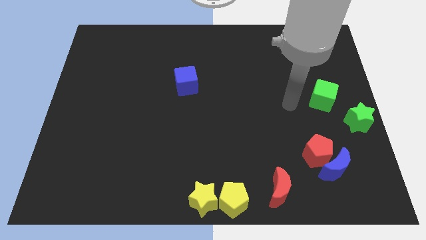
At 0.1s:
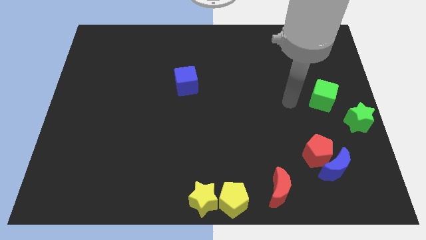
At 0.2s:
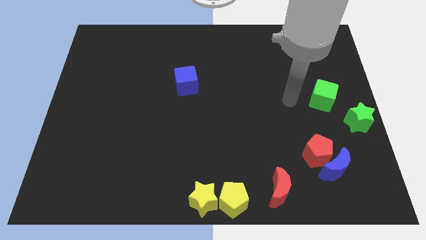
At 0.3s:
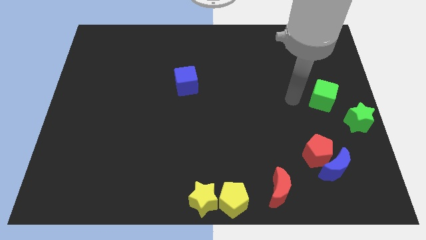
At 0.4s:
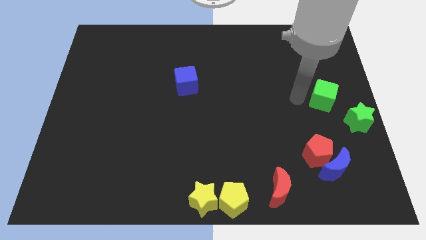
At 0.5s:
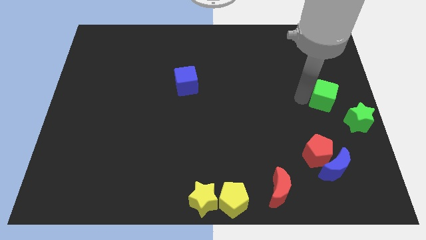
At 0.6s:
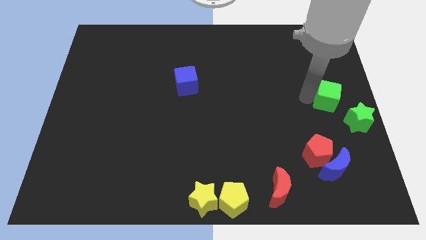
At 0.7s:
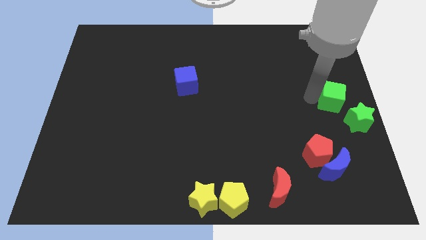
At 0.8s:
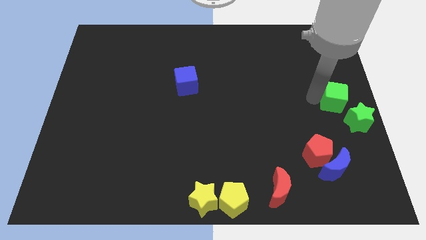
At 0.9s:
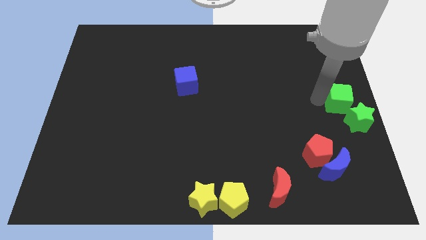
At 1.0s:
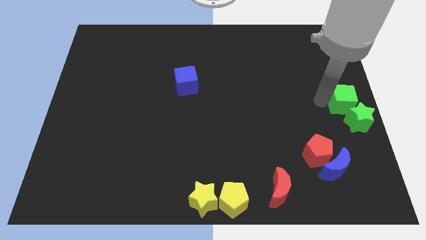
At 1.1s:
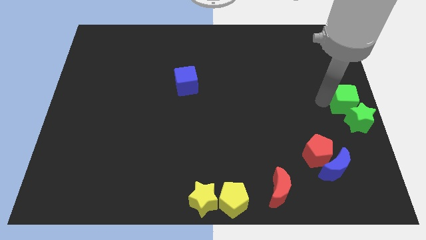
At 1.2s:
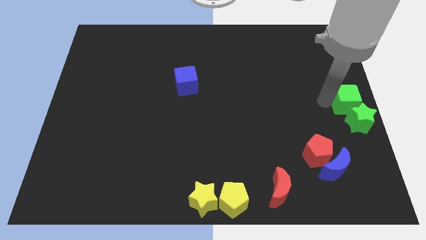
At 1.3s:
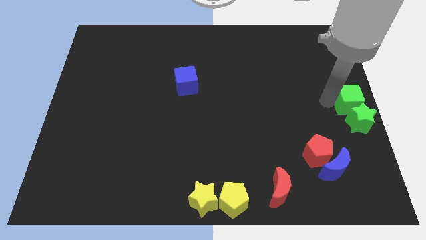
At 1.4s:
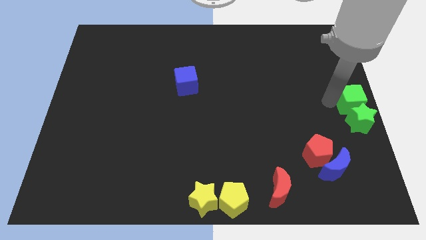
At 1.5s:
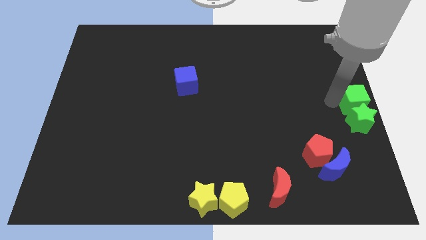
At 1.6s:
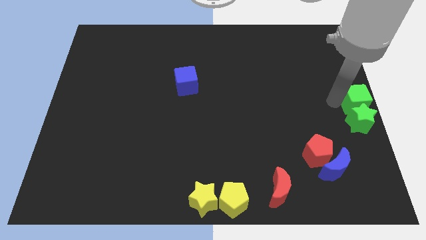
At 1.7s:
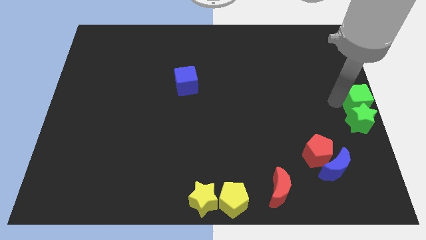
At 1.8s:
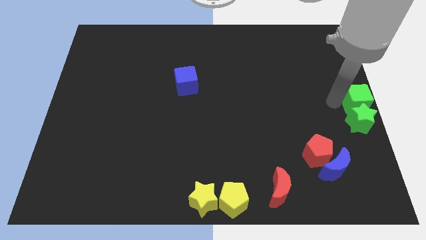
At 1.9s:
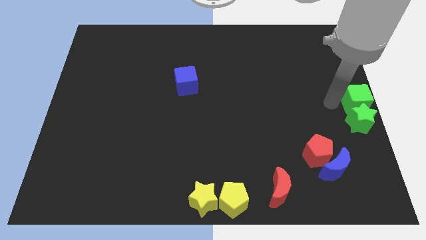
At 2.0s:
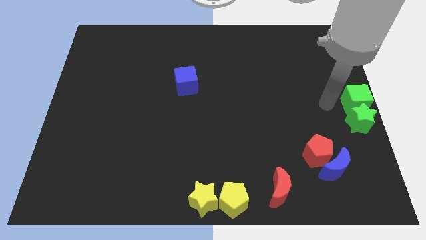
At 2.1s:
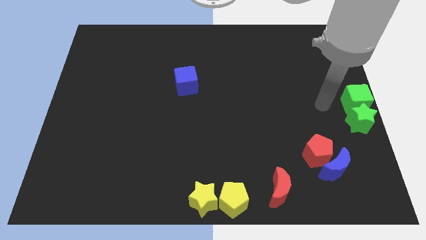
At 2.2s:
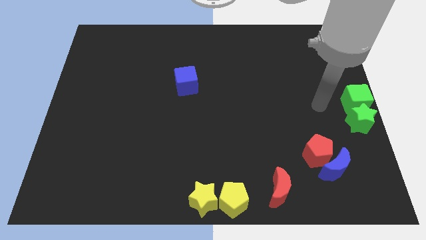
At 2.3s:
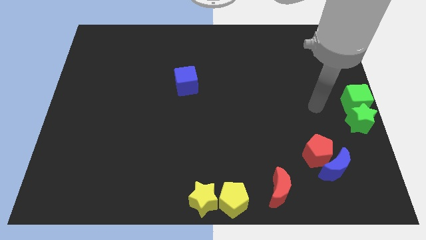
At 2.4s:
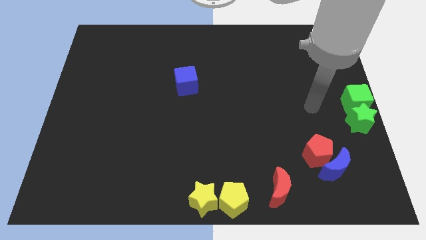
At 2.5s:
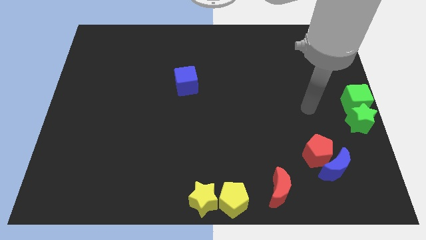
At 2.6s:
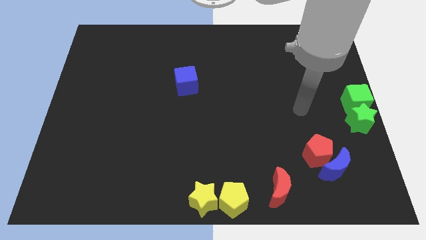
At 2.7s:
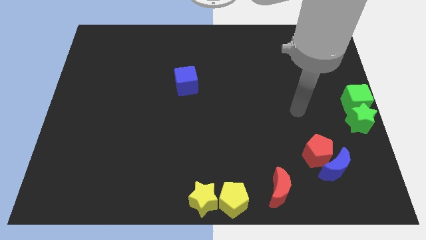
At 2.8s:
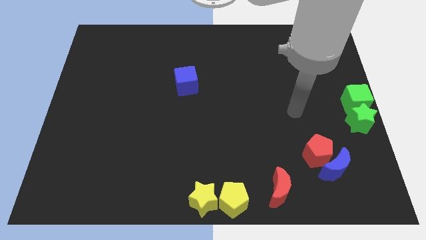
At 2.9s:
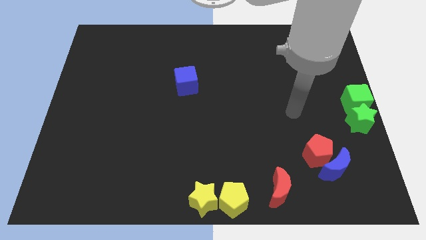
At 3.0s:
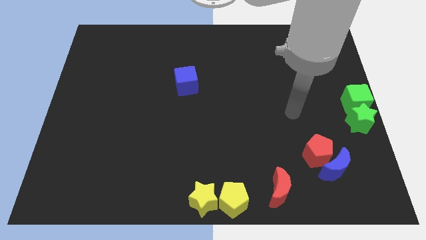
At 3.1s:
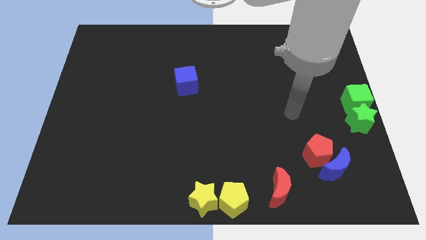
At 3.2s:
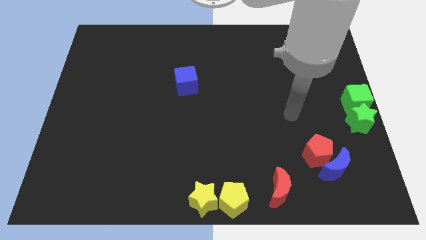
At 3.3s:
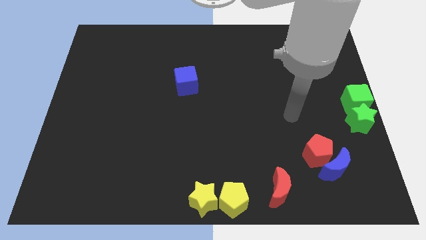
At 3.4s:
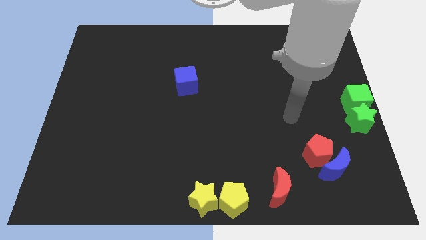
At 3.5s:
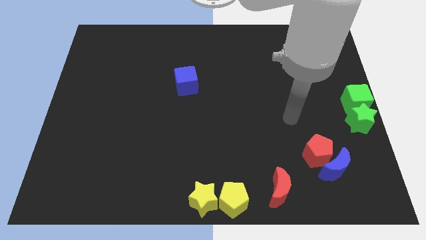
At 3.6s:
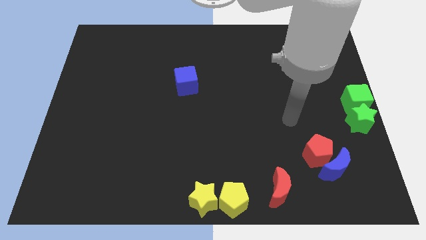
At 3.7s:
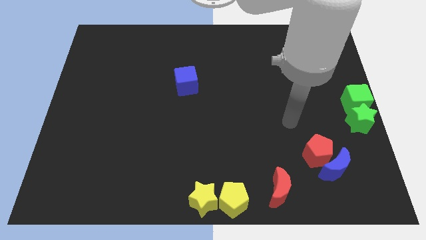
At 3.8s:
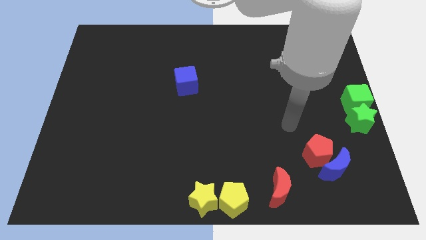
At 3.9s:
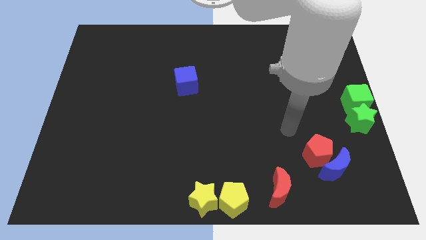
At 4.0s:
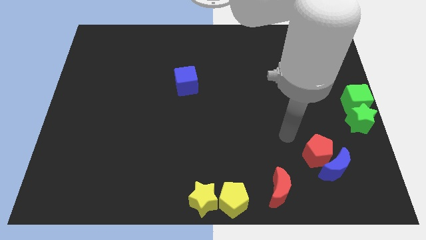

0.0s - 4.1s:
put the green blocks together

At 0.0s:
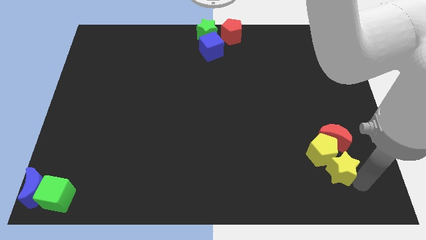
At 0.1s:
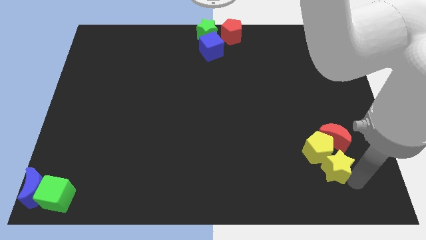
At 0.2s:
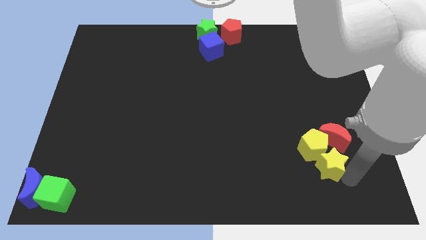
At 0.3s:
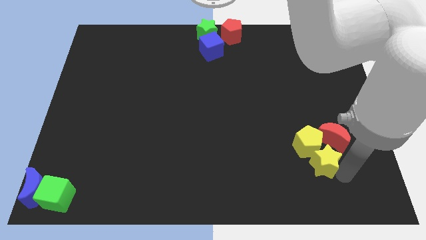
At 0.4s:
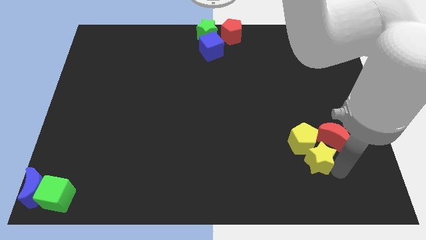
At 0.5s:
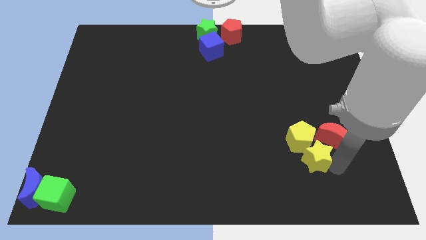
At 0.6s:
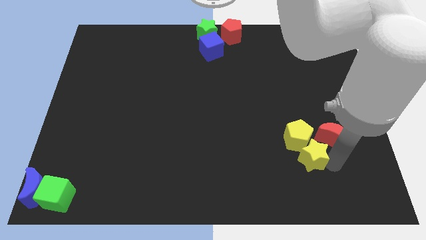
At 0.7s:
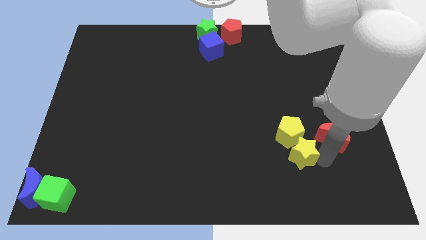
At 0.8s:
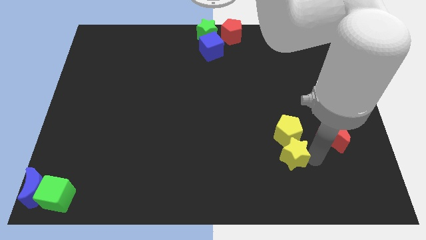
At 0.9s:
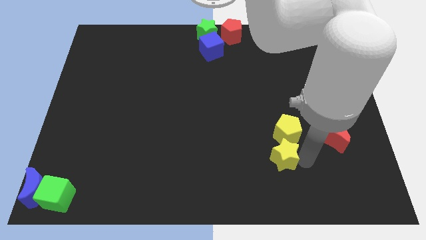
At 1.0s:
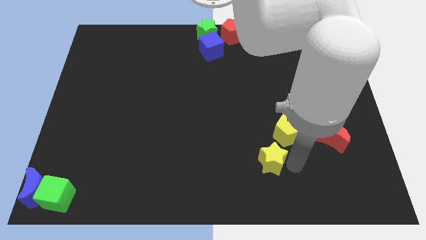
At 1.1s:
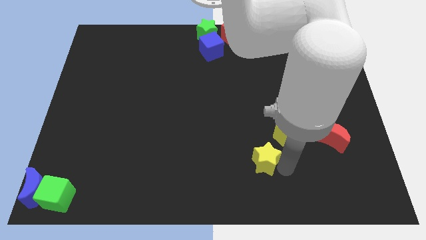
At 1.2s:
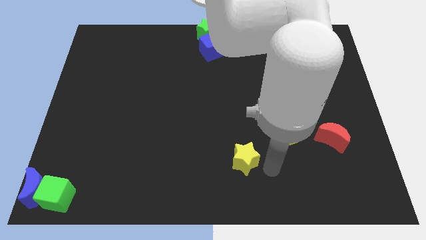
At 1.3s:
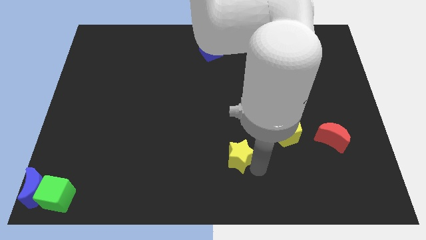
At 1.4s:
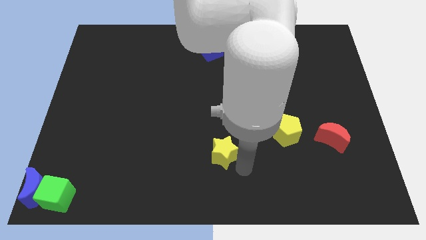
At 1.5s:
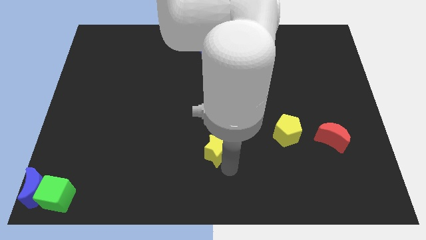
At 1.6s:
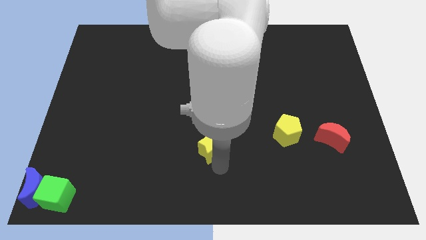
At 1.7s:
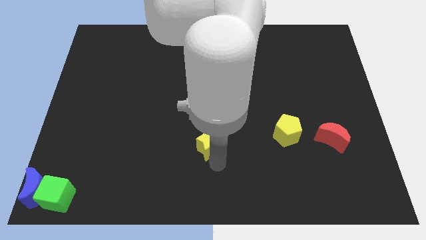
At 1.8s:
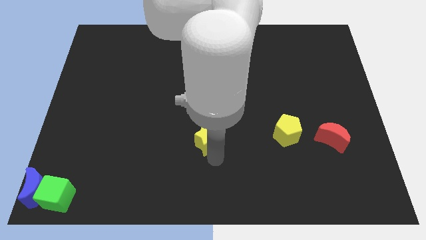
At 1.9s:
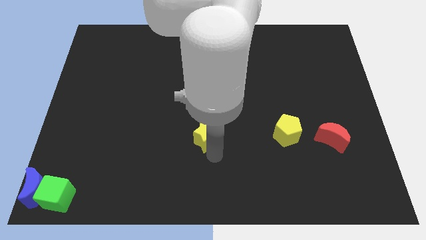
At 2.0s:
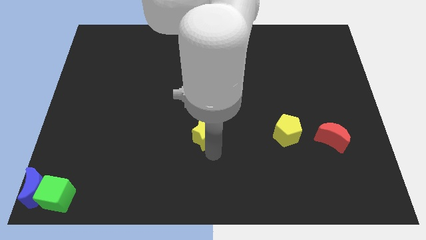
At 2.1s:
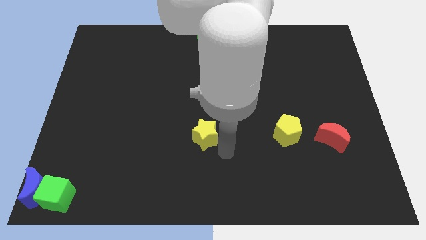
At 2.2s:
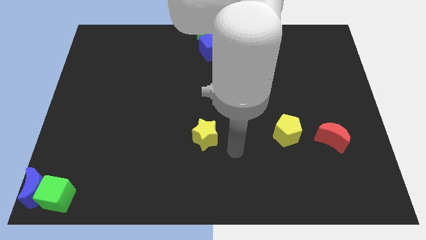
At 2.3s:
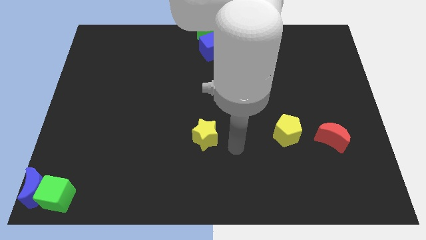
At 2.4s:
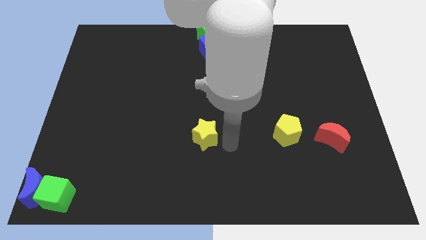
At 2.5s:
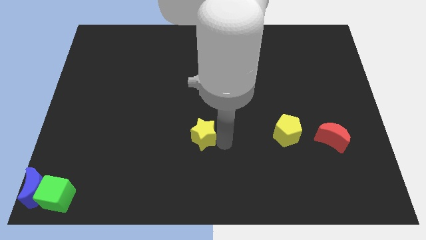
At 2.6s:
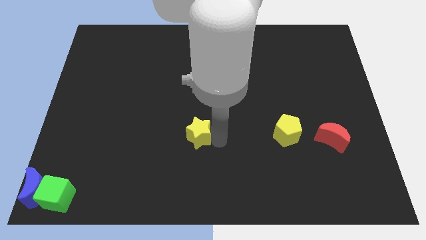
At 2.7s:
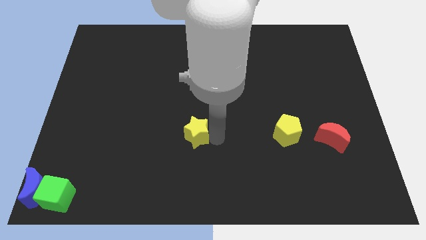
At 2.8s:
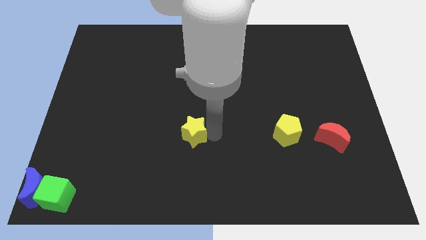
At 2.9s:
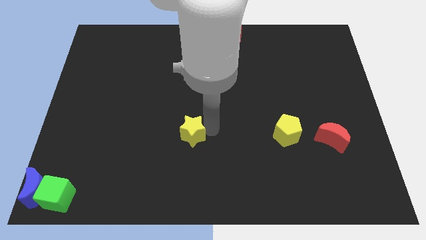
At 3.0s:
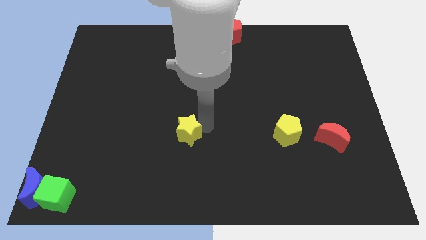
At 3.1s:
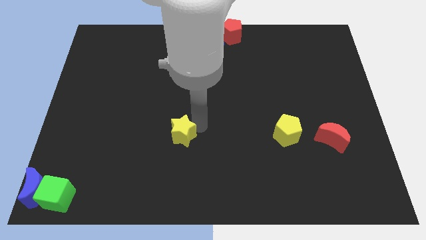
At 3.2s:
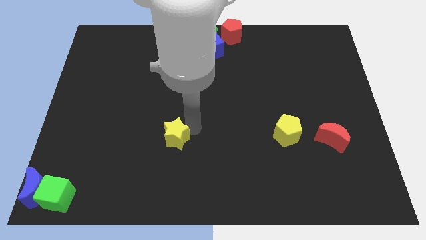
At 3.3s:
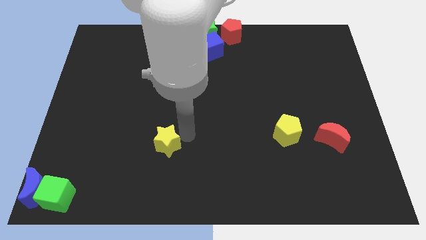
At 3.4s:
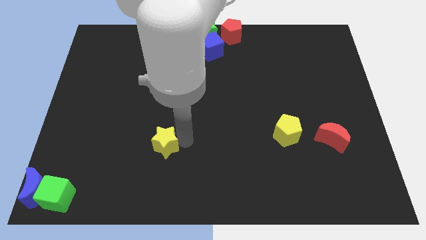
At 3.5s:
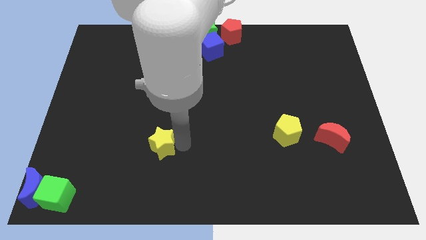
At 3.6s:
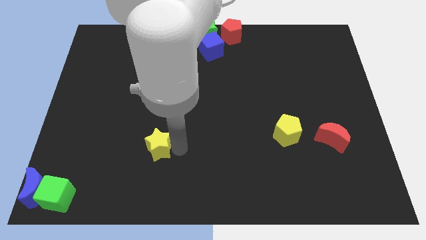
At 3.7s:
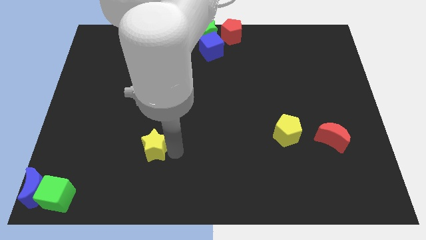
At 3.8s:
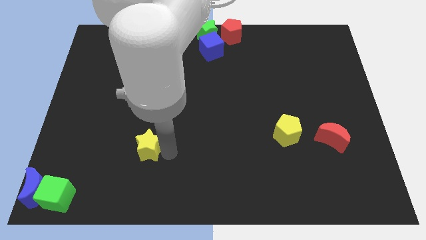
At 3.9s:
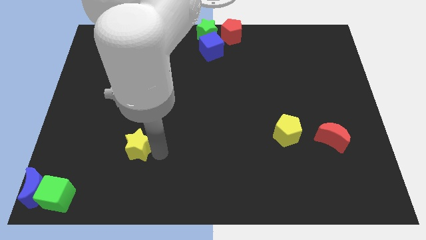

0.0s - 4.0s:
push the yellow star to the left side of the board

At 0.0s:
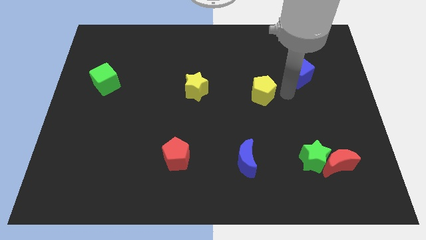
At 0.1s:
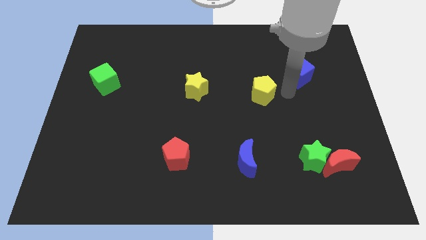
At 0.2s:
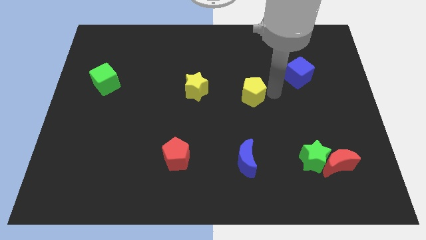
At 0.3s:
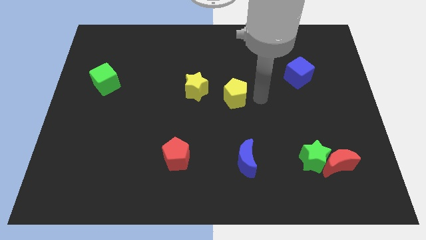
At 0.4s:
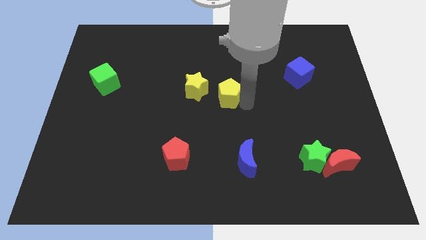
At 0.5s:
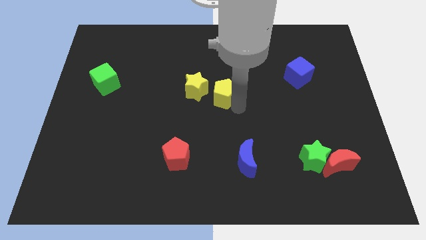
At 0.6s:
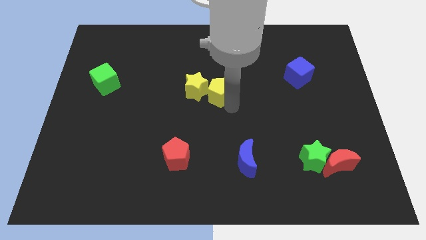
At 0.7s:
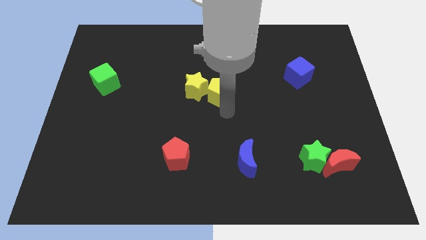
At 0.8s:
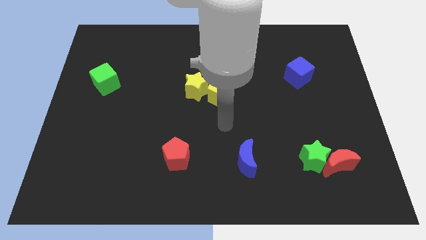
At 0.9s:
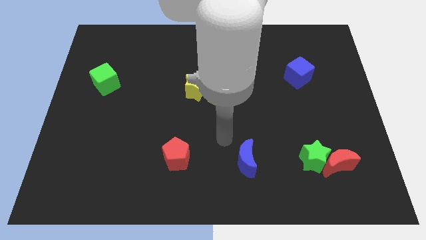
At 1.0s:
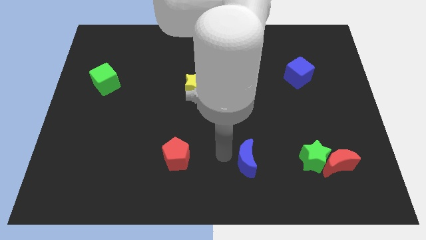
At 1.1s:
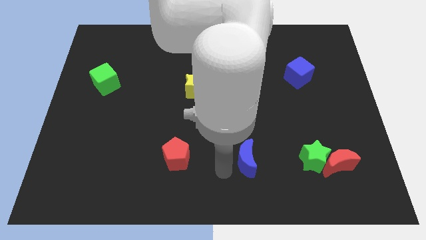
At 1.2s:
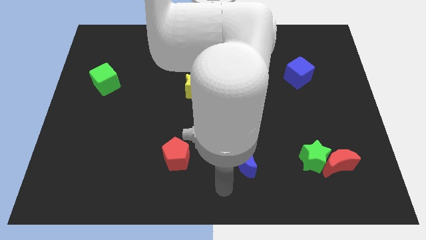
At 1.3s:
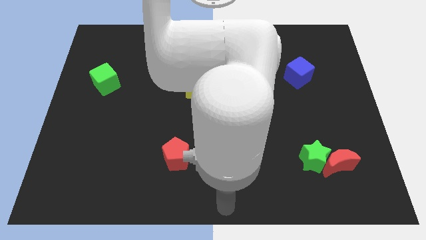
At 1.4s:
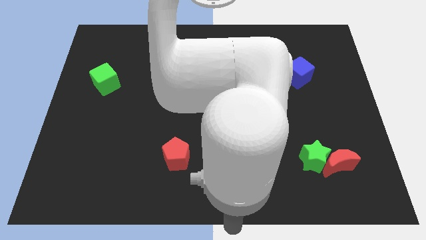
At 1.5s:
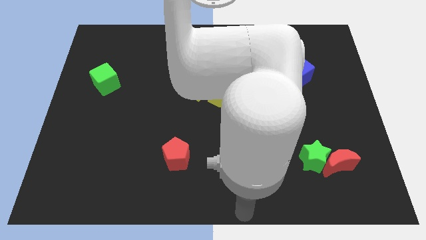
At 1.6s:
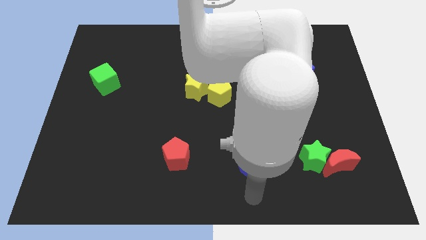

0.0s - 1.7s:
push the yellow pentagon close to the yellow star
